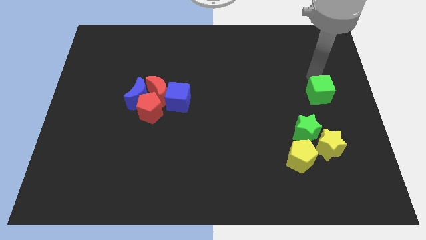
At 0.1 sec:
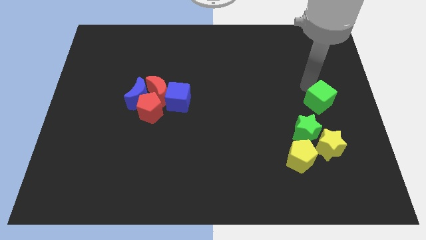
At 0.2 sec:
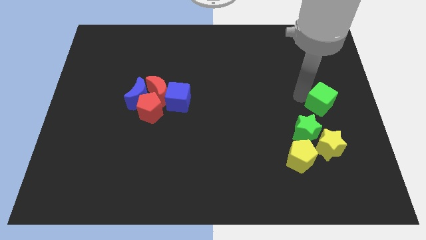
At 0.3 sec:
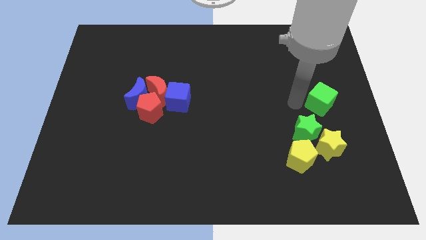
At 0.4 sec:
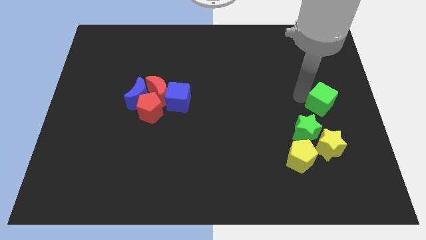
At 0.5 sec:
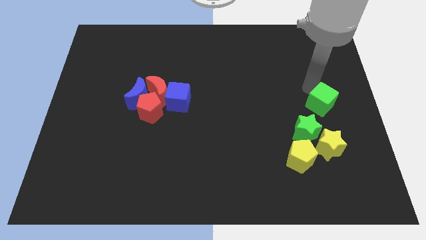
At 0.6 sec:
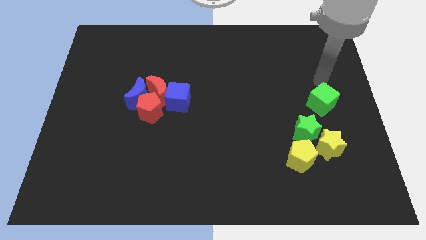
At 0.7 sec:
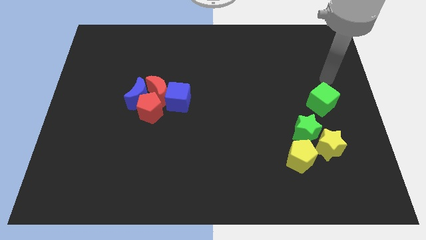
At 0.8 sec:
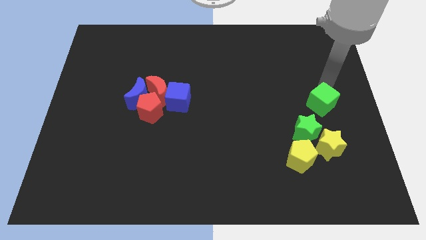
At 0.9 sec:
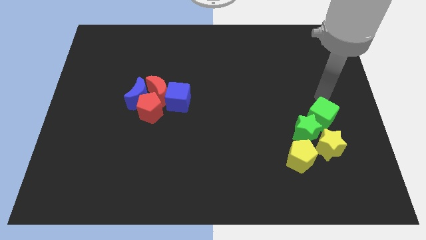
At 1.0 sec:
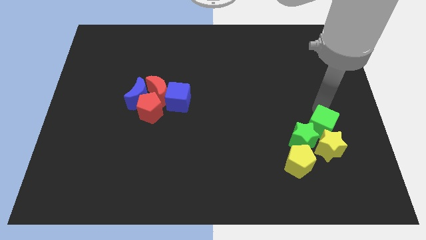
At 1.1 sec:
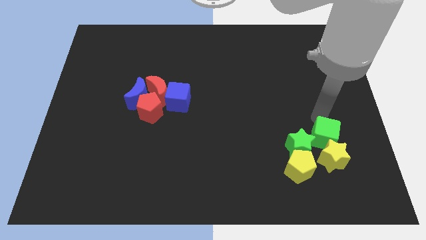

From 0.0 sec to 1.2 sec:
place green cube above yellow star

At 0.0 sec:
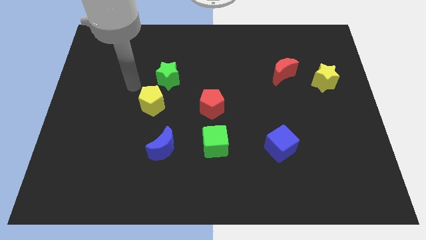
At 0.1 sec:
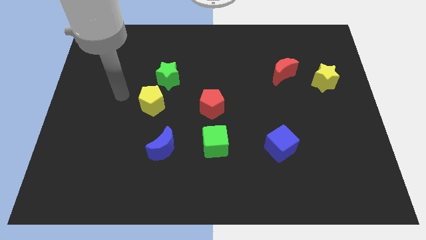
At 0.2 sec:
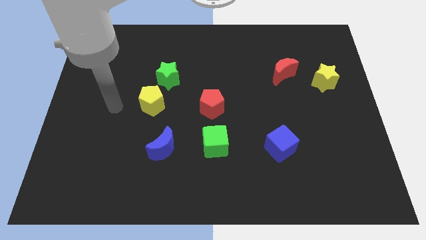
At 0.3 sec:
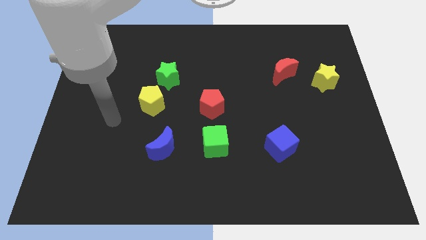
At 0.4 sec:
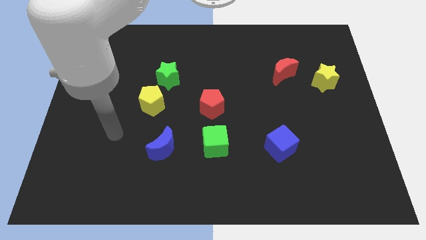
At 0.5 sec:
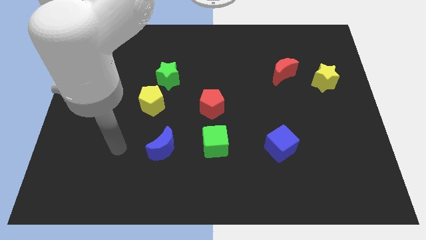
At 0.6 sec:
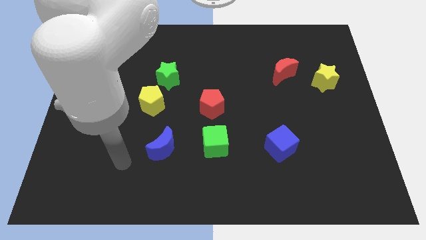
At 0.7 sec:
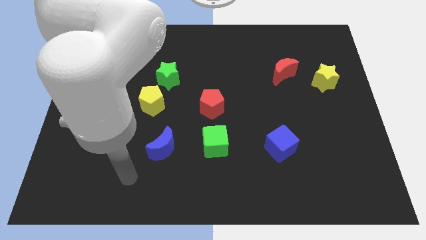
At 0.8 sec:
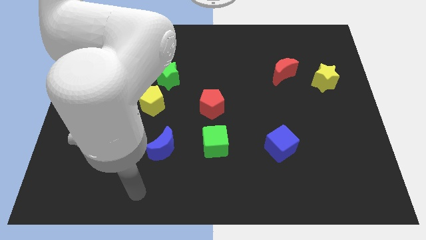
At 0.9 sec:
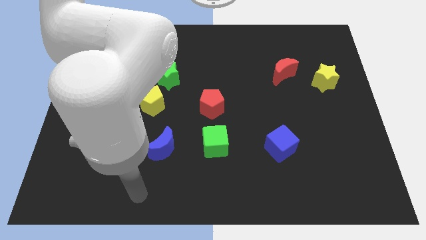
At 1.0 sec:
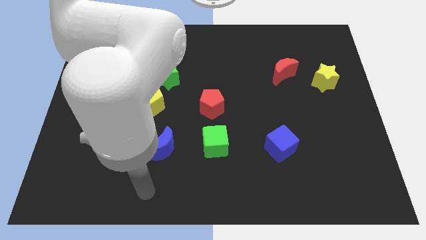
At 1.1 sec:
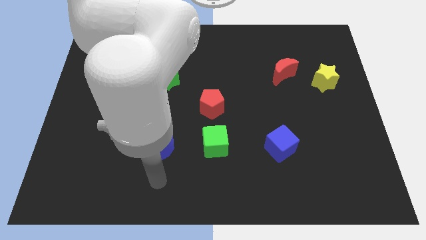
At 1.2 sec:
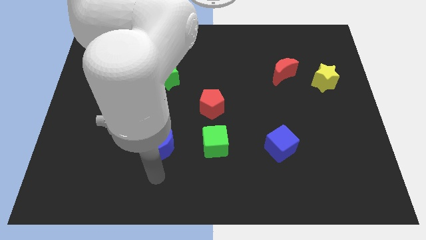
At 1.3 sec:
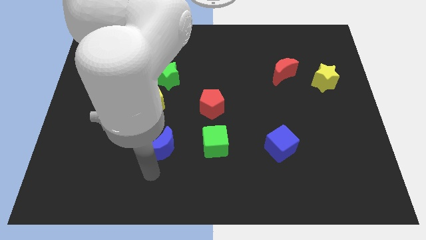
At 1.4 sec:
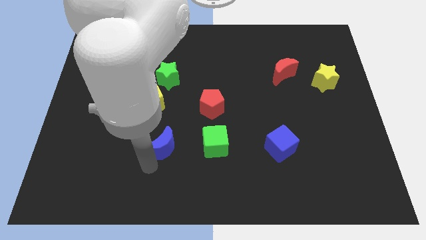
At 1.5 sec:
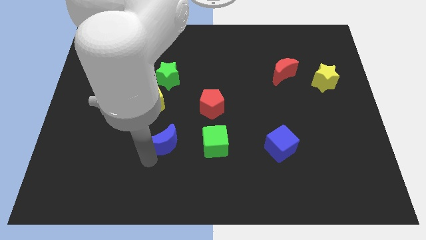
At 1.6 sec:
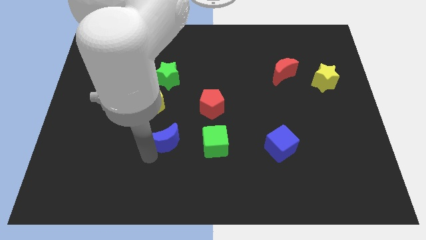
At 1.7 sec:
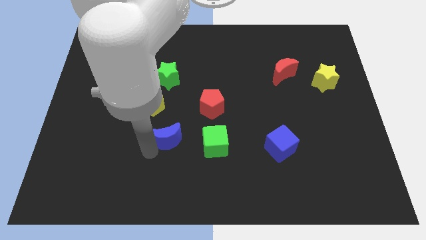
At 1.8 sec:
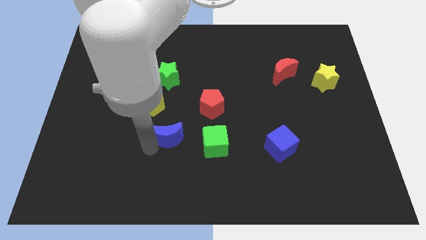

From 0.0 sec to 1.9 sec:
push the blue crescent slightly to the top

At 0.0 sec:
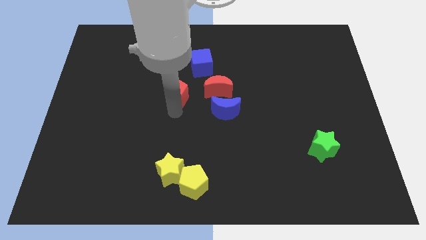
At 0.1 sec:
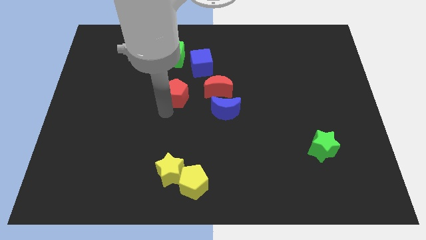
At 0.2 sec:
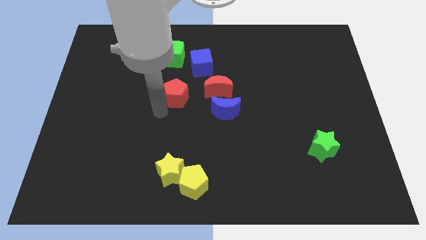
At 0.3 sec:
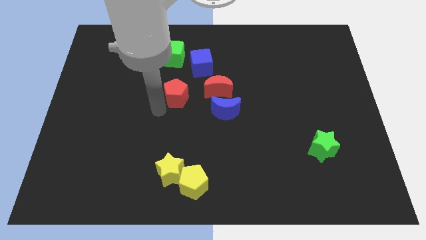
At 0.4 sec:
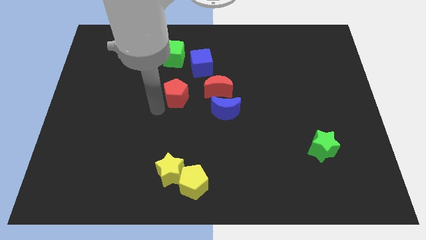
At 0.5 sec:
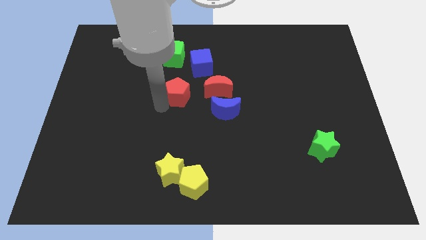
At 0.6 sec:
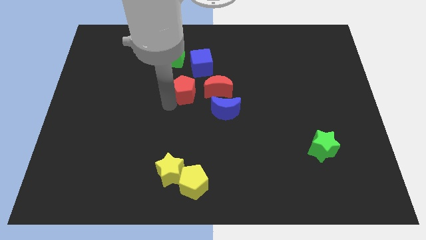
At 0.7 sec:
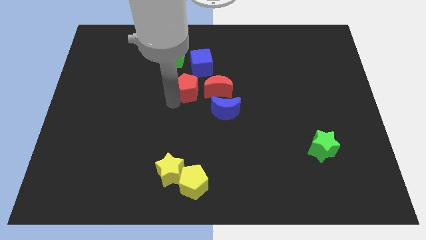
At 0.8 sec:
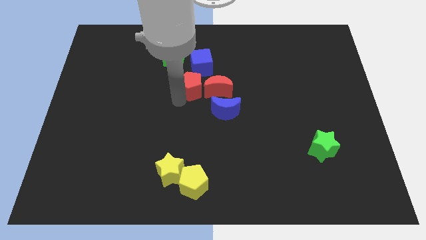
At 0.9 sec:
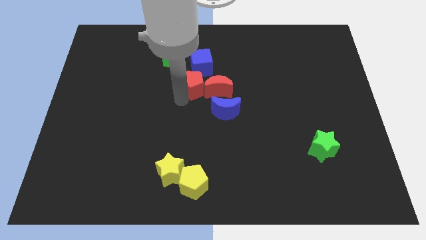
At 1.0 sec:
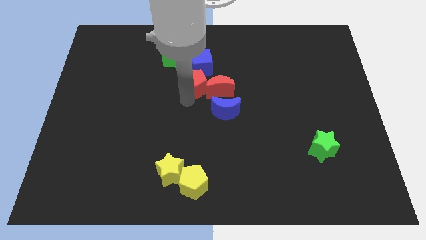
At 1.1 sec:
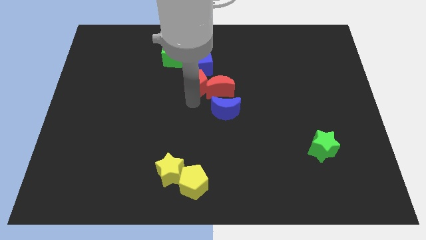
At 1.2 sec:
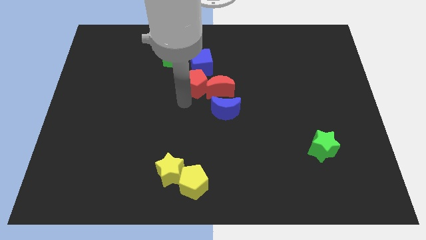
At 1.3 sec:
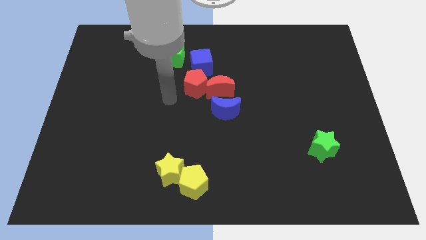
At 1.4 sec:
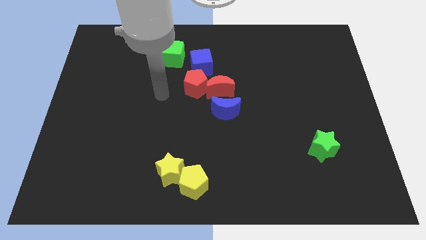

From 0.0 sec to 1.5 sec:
push the red pentagon into the red crescent

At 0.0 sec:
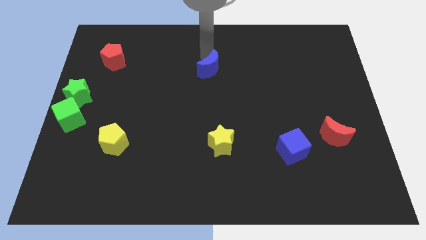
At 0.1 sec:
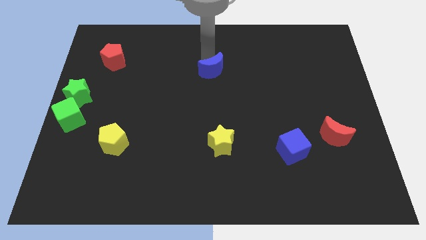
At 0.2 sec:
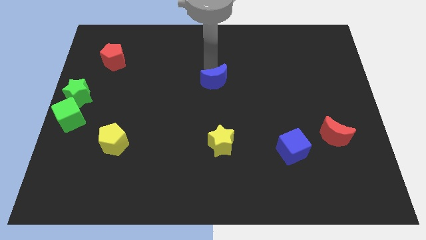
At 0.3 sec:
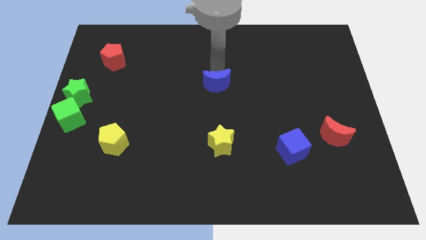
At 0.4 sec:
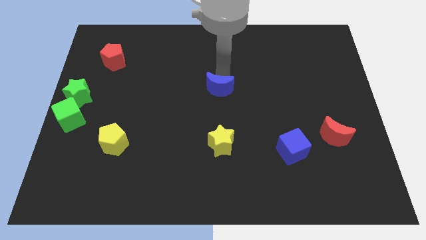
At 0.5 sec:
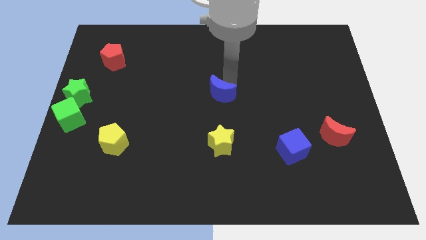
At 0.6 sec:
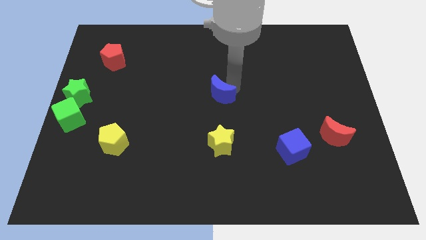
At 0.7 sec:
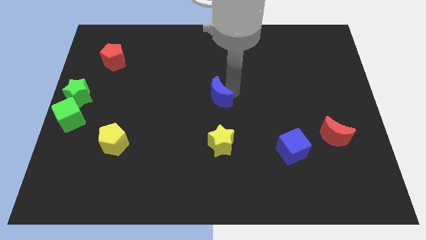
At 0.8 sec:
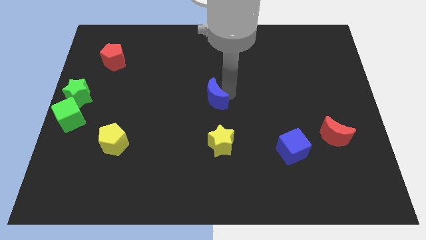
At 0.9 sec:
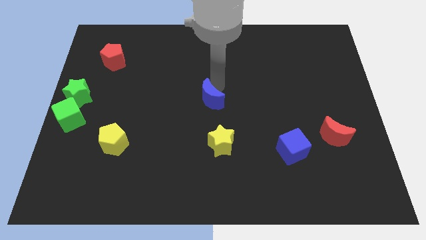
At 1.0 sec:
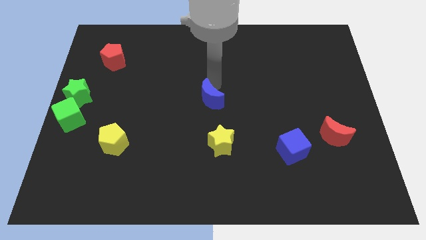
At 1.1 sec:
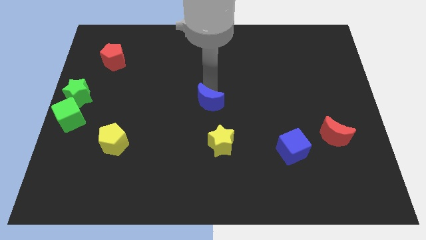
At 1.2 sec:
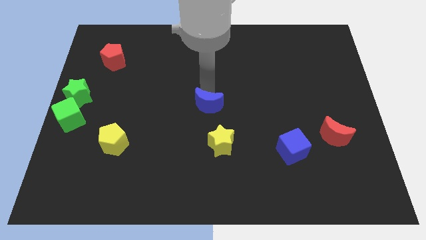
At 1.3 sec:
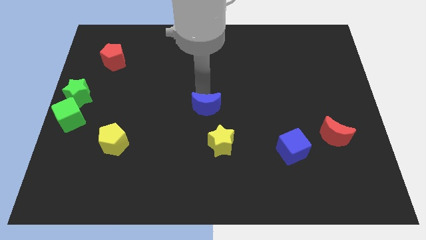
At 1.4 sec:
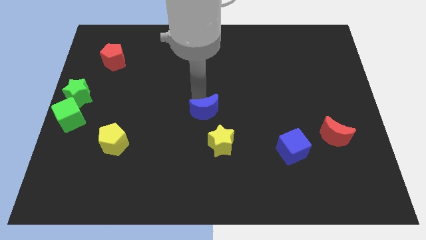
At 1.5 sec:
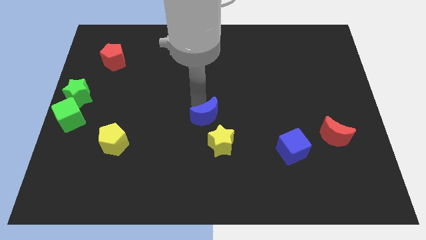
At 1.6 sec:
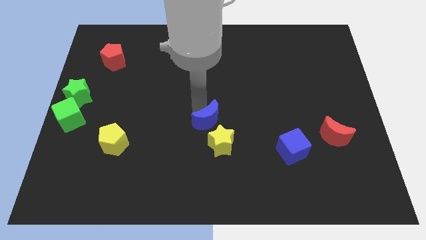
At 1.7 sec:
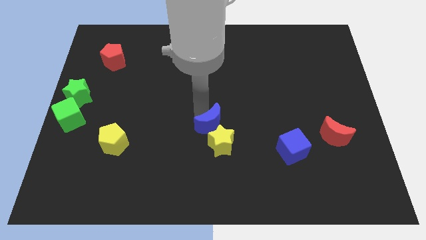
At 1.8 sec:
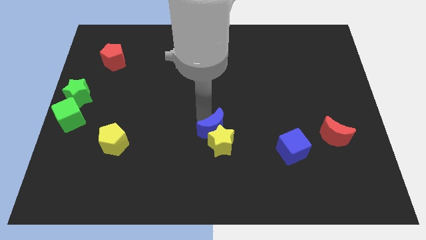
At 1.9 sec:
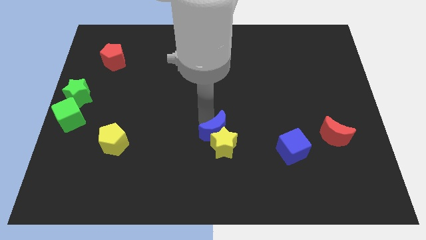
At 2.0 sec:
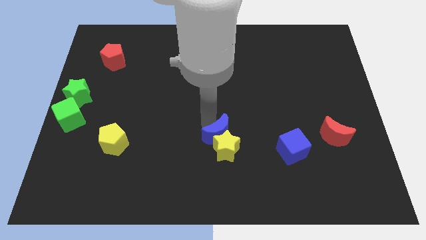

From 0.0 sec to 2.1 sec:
push the blue moon at the top left side of the yellow star

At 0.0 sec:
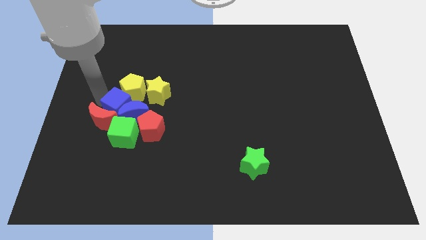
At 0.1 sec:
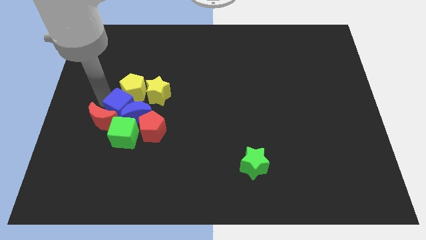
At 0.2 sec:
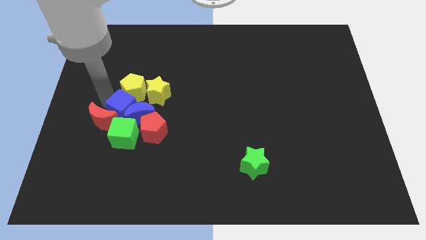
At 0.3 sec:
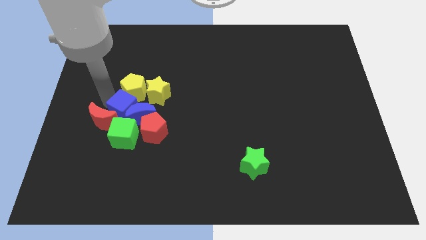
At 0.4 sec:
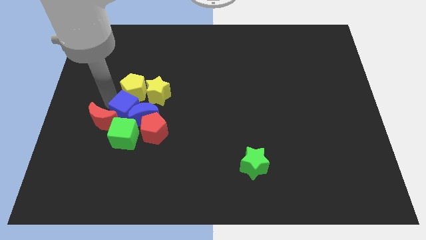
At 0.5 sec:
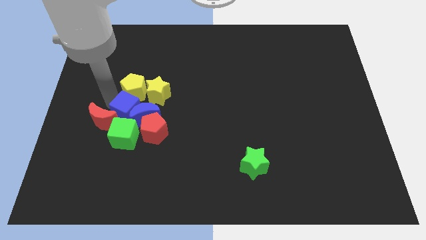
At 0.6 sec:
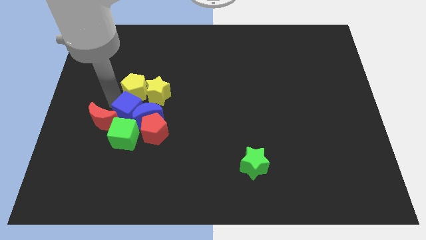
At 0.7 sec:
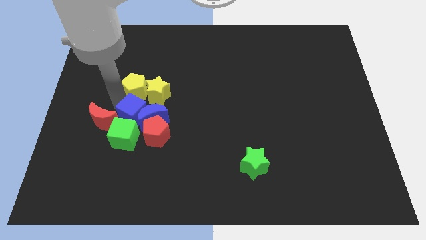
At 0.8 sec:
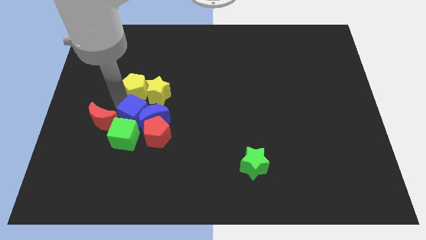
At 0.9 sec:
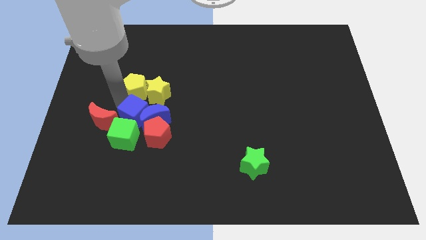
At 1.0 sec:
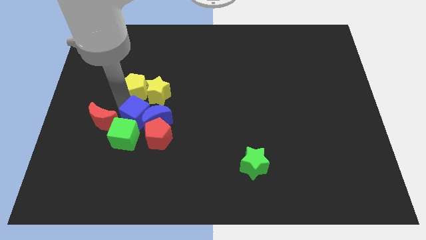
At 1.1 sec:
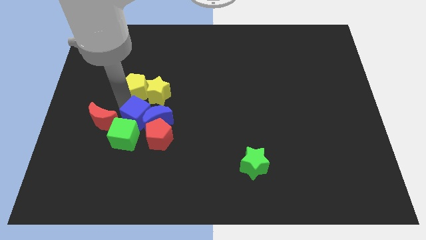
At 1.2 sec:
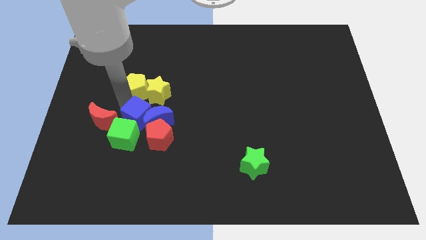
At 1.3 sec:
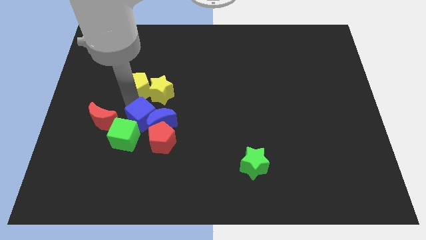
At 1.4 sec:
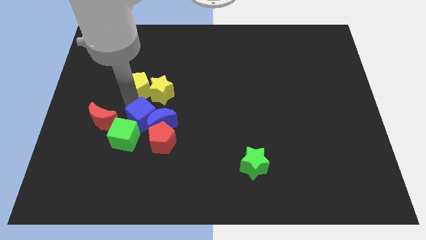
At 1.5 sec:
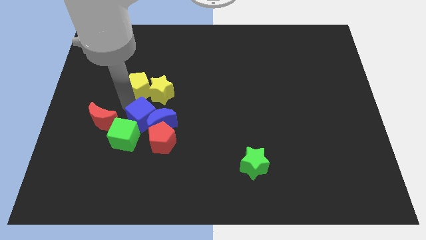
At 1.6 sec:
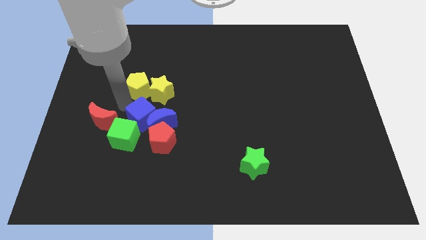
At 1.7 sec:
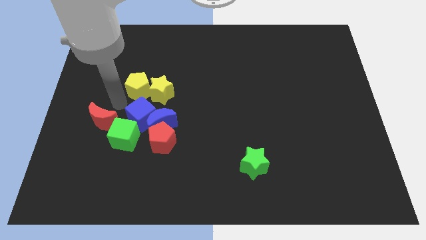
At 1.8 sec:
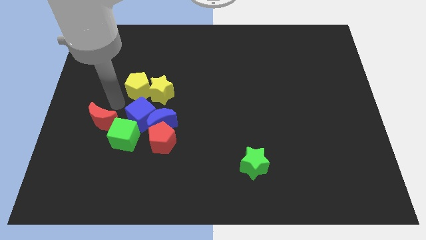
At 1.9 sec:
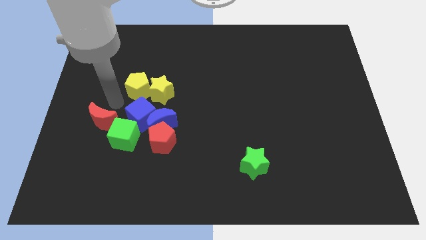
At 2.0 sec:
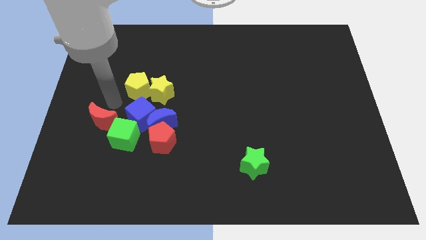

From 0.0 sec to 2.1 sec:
move the blue cube towards the blue crescent

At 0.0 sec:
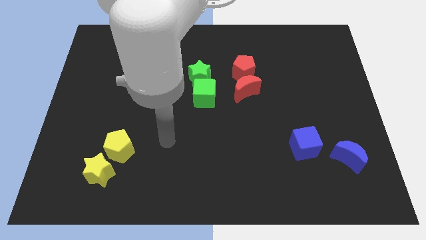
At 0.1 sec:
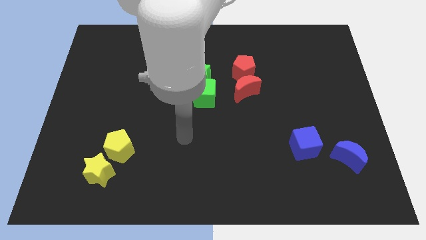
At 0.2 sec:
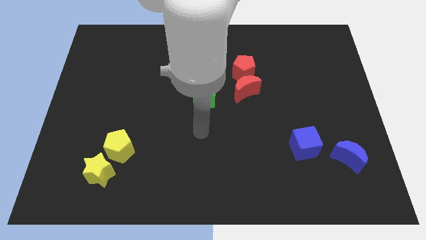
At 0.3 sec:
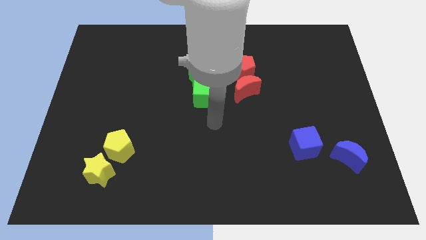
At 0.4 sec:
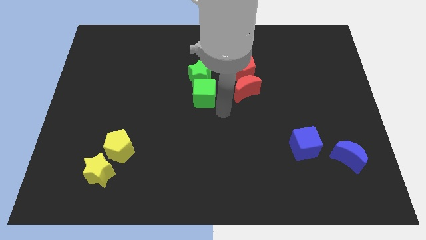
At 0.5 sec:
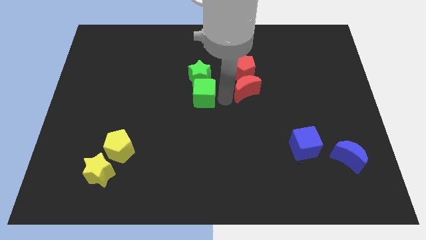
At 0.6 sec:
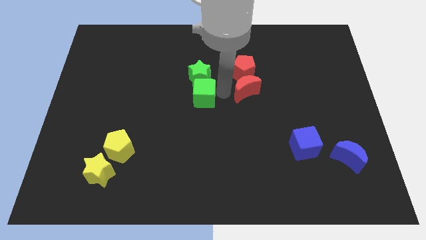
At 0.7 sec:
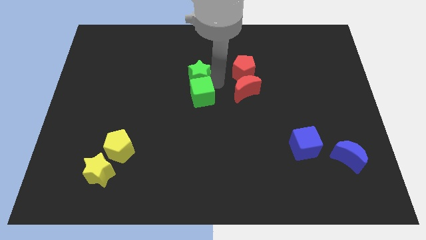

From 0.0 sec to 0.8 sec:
tap the green cube
